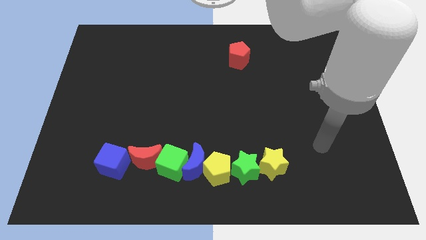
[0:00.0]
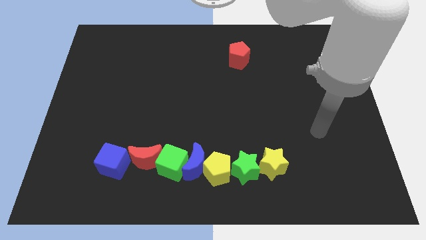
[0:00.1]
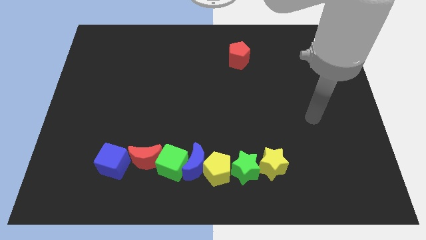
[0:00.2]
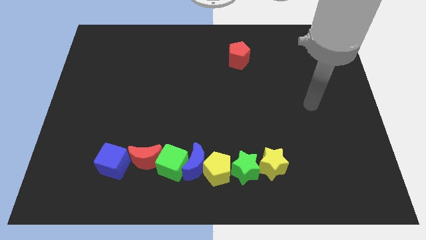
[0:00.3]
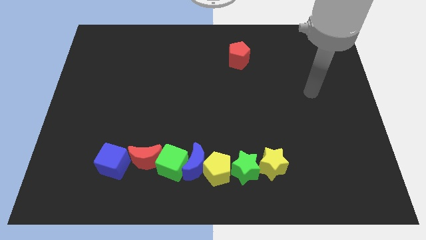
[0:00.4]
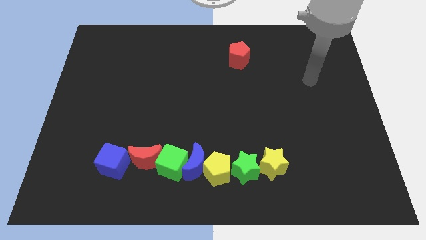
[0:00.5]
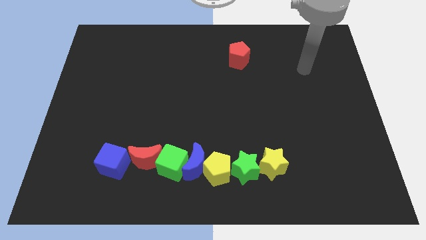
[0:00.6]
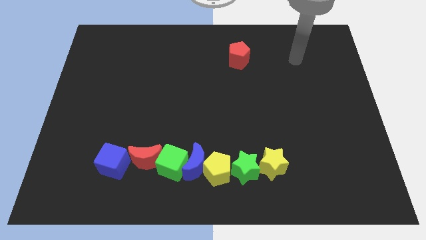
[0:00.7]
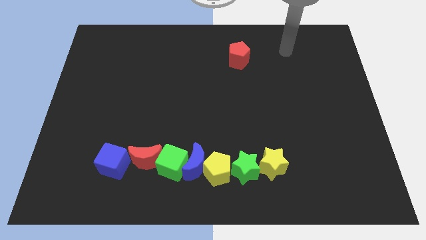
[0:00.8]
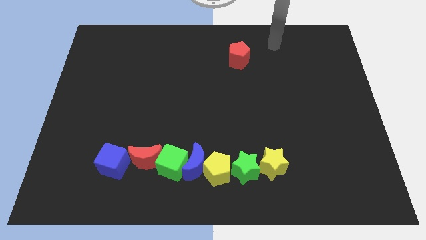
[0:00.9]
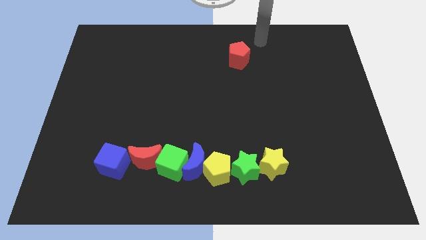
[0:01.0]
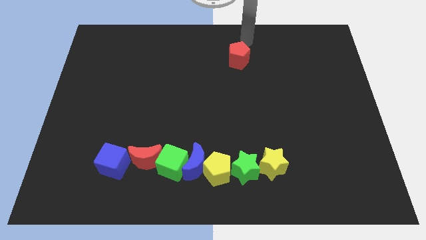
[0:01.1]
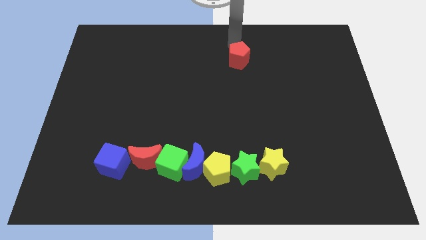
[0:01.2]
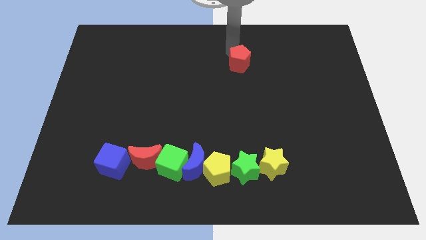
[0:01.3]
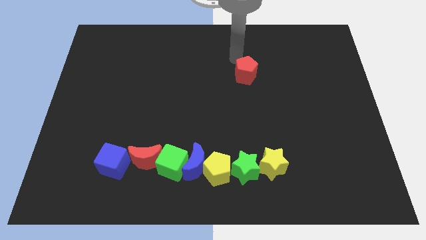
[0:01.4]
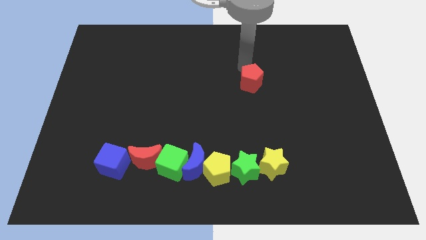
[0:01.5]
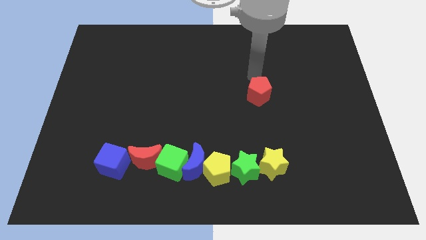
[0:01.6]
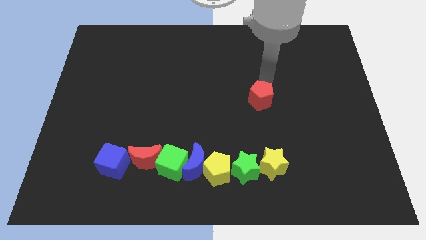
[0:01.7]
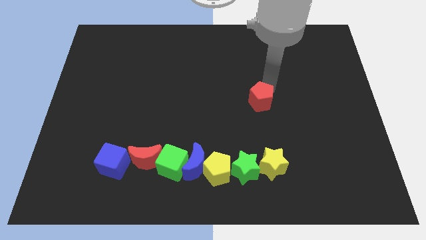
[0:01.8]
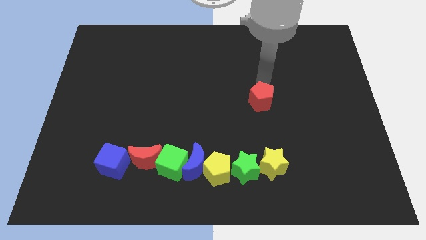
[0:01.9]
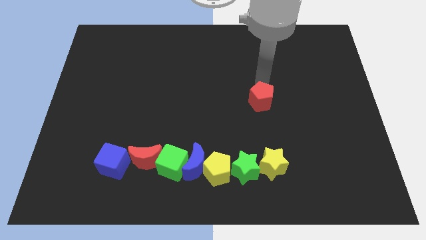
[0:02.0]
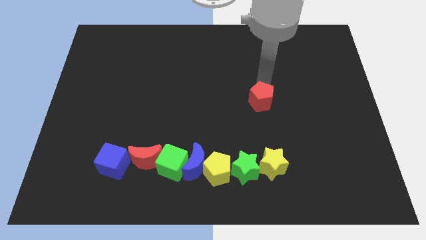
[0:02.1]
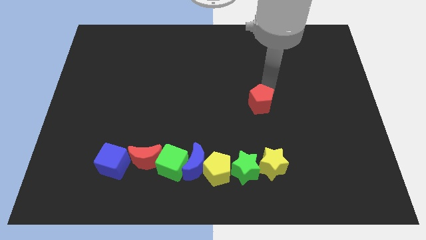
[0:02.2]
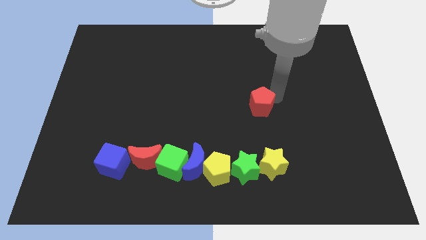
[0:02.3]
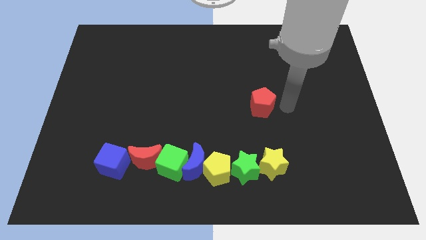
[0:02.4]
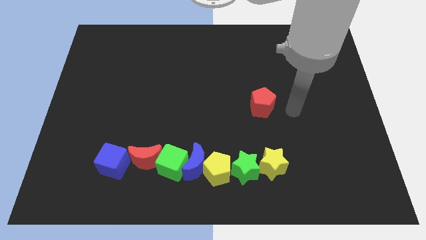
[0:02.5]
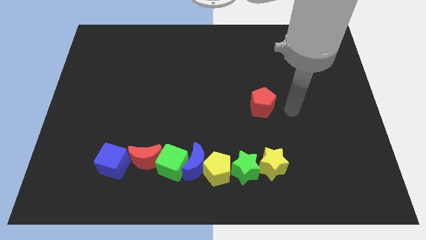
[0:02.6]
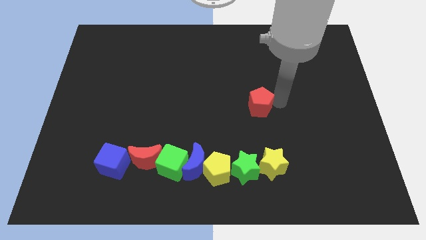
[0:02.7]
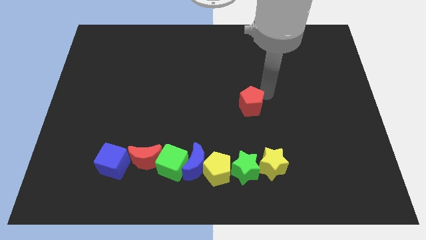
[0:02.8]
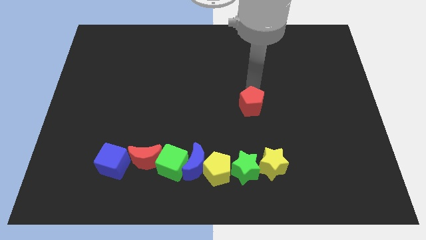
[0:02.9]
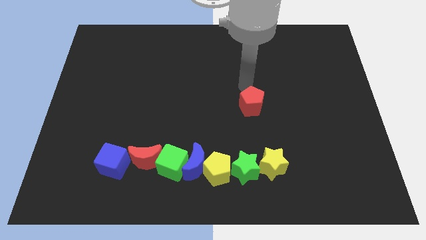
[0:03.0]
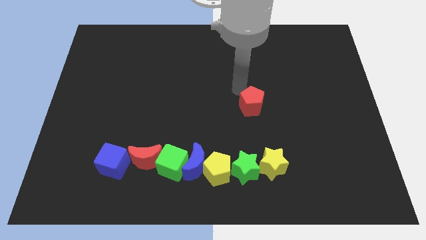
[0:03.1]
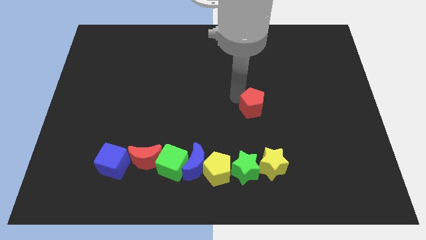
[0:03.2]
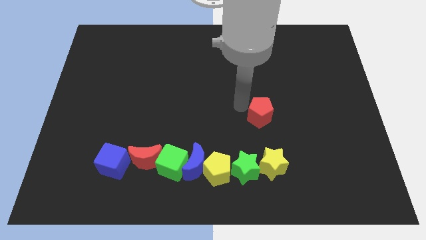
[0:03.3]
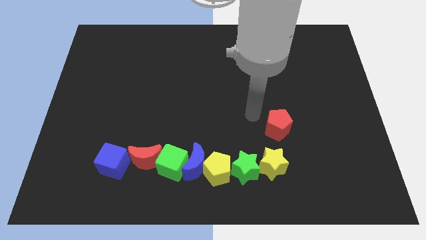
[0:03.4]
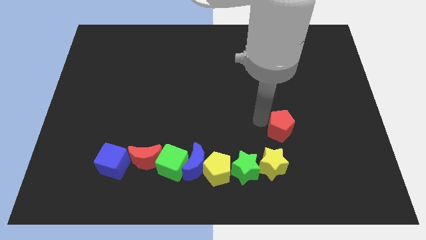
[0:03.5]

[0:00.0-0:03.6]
push the red pentagon downwards above yellow str

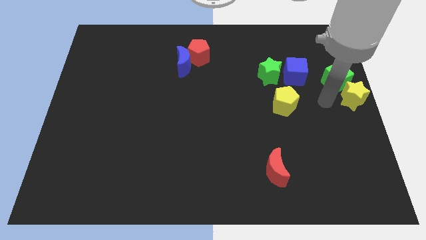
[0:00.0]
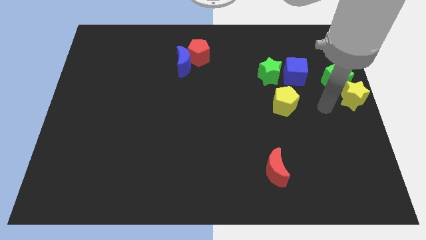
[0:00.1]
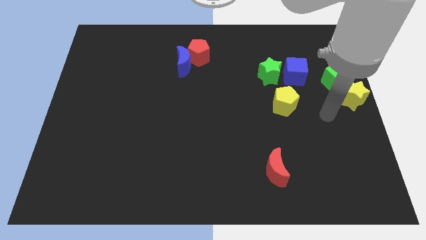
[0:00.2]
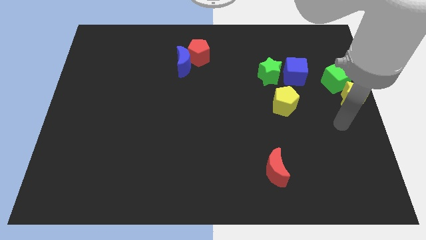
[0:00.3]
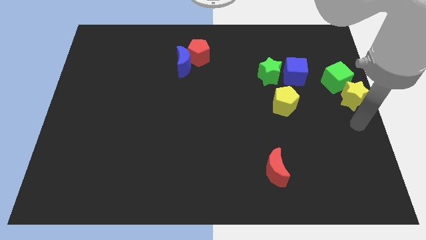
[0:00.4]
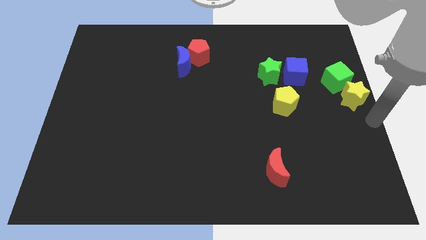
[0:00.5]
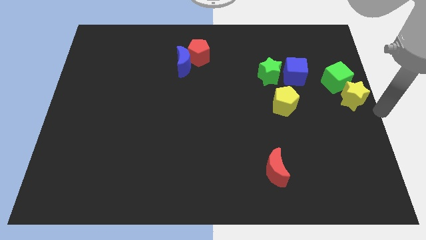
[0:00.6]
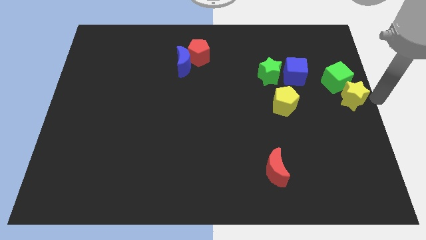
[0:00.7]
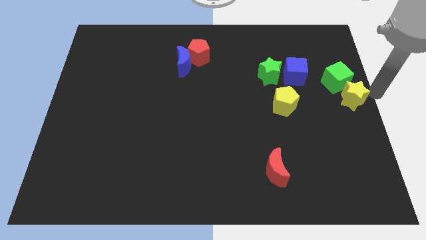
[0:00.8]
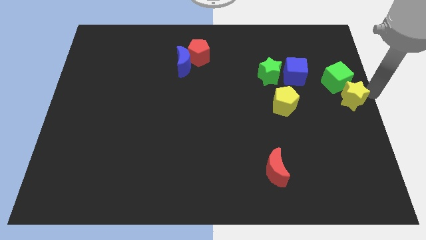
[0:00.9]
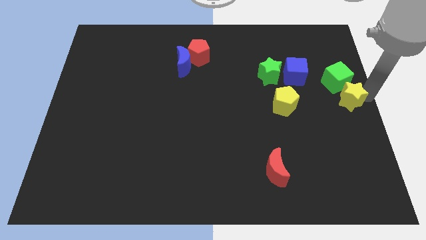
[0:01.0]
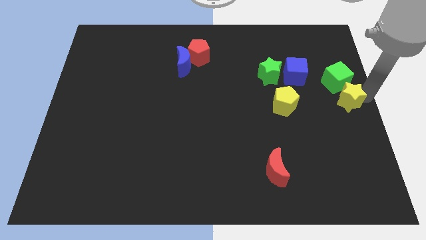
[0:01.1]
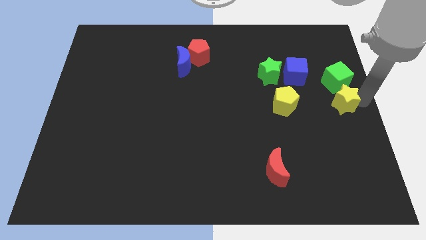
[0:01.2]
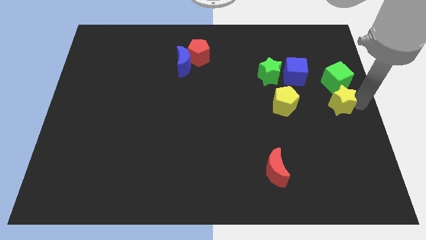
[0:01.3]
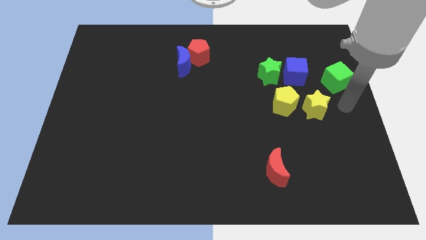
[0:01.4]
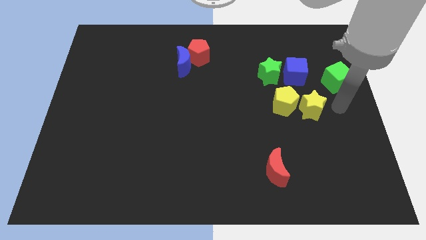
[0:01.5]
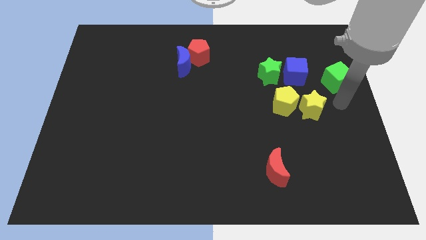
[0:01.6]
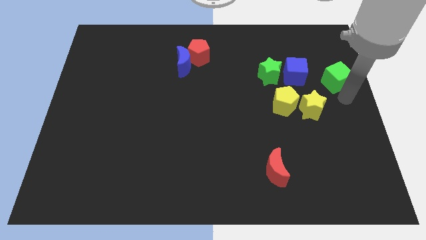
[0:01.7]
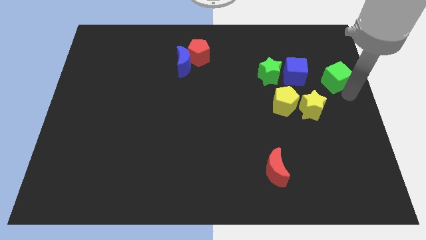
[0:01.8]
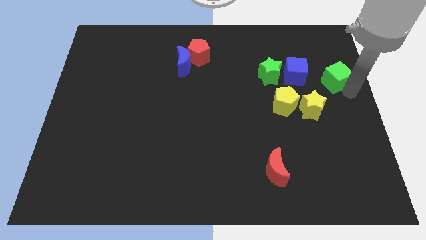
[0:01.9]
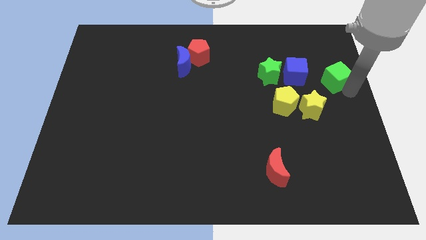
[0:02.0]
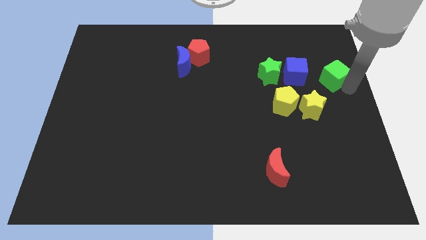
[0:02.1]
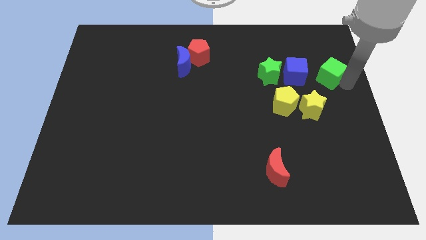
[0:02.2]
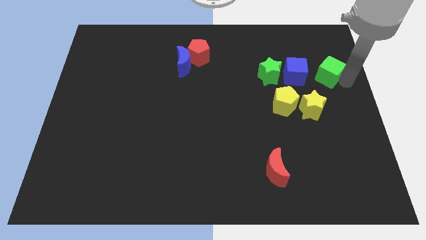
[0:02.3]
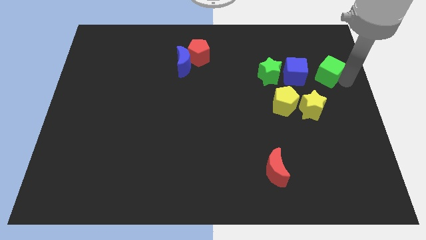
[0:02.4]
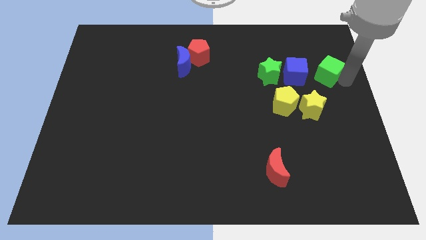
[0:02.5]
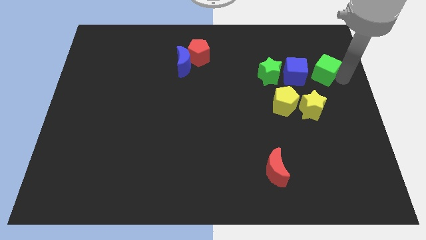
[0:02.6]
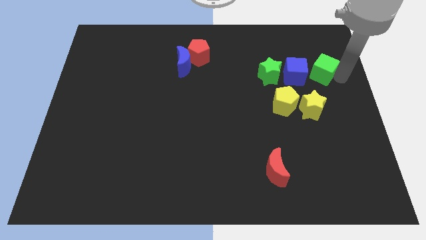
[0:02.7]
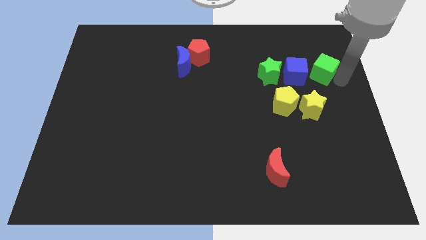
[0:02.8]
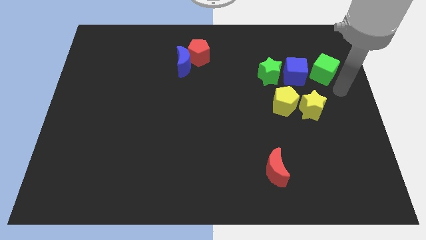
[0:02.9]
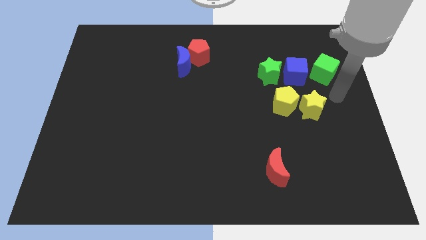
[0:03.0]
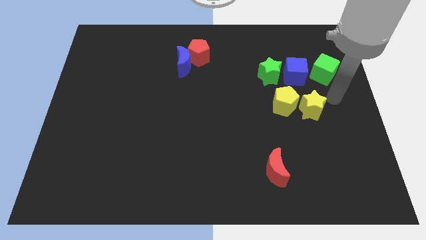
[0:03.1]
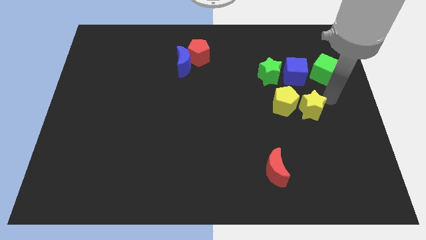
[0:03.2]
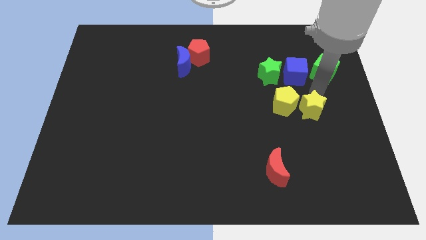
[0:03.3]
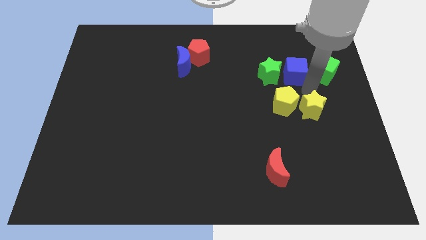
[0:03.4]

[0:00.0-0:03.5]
separate green cube and yellow star from each other

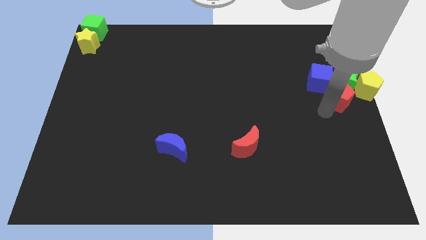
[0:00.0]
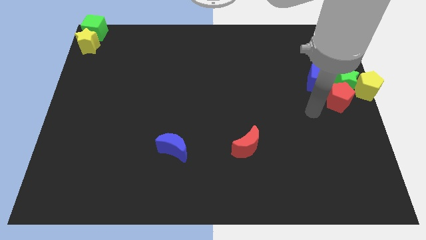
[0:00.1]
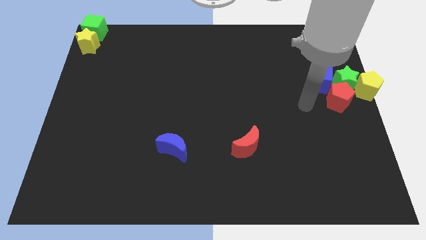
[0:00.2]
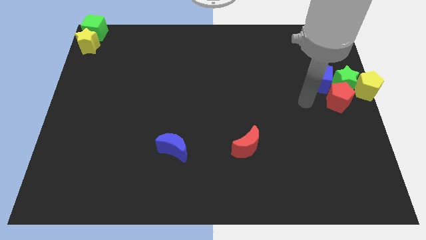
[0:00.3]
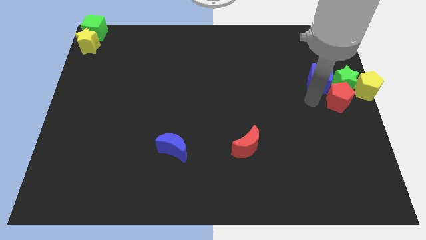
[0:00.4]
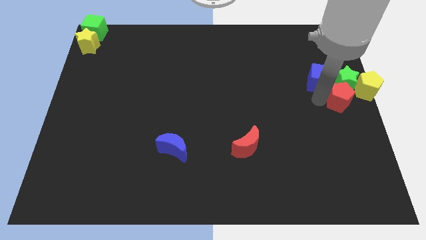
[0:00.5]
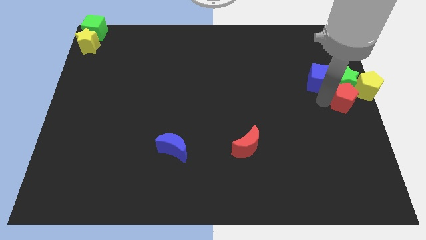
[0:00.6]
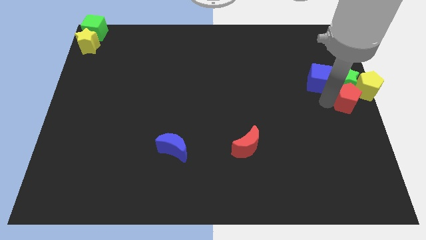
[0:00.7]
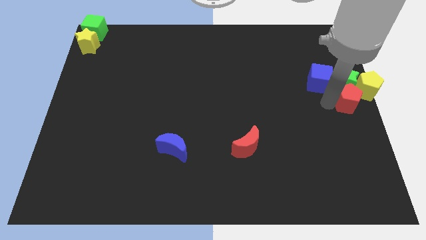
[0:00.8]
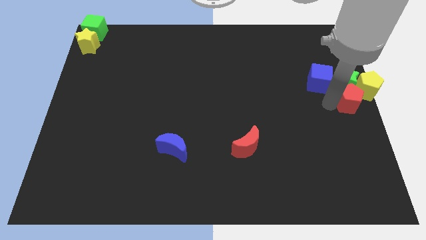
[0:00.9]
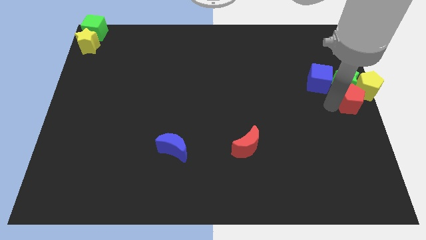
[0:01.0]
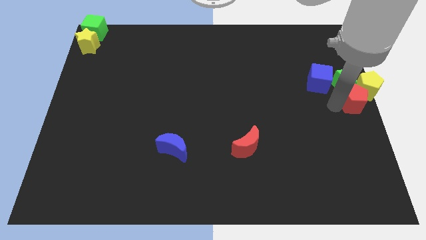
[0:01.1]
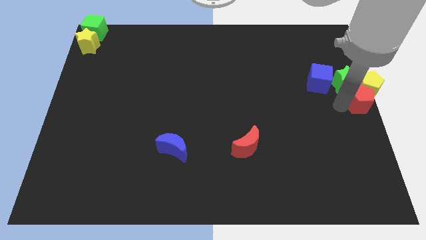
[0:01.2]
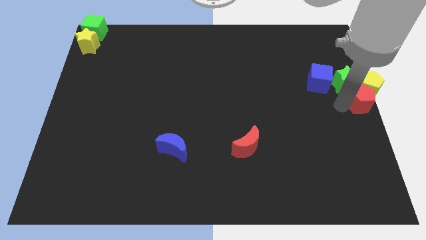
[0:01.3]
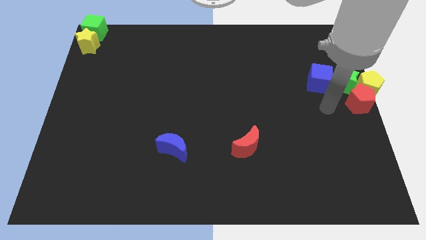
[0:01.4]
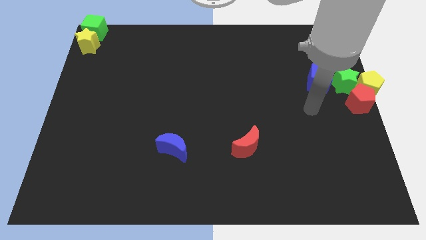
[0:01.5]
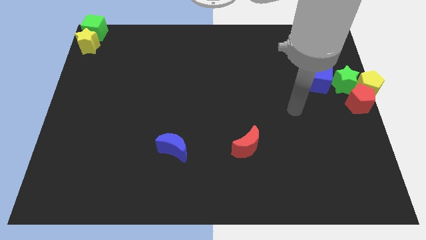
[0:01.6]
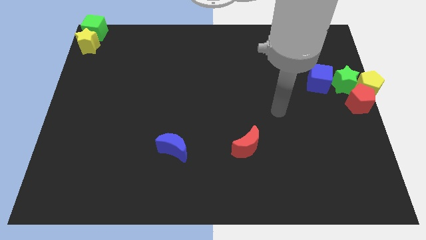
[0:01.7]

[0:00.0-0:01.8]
push the red pentagon below yellow pentagon

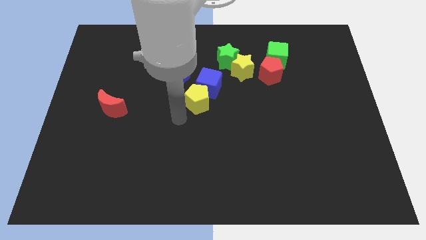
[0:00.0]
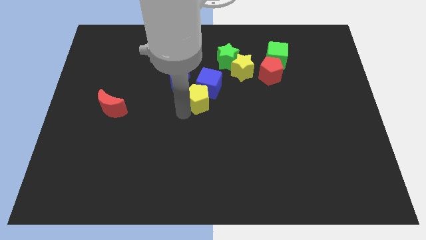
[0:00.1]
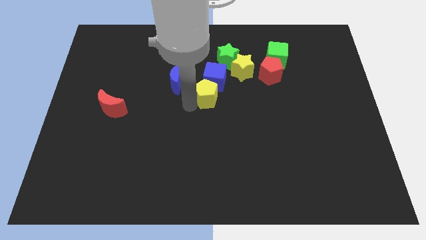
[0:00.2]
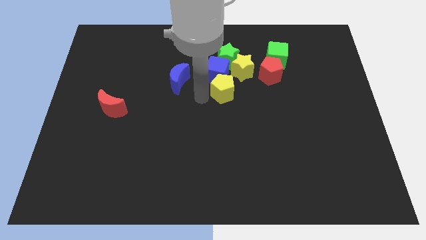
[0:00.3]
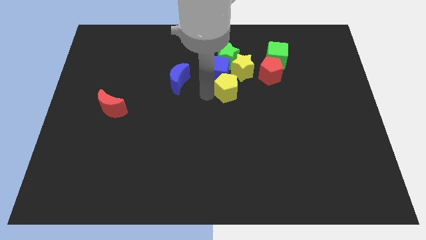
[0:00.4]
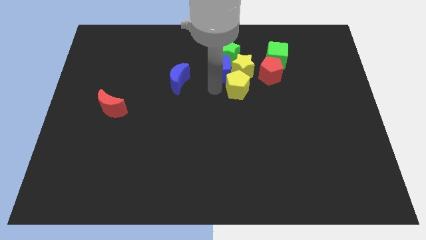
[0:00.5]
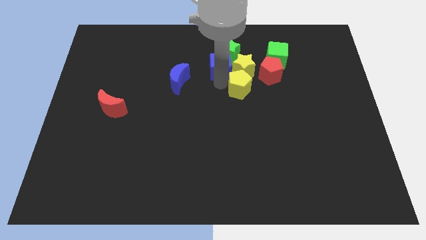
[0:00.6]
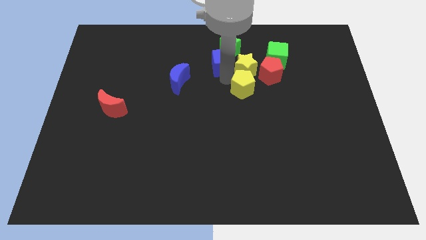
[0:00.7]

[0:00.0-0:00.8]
push yellow pentagon to the bottom of yellow star
